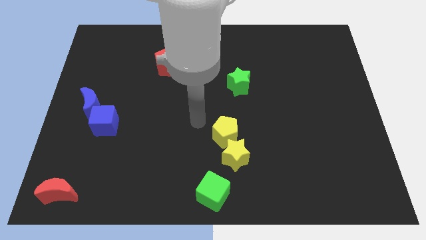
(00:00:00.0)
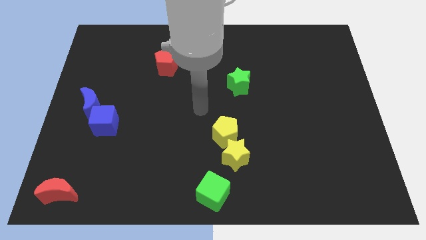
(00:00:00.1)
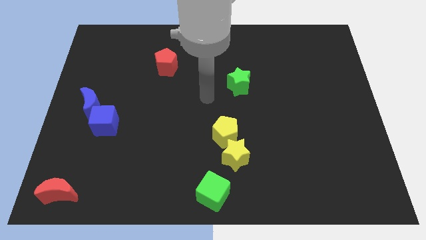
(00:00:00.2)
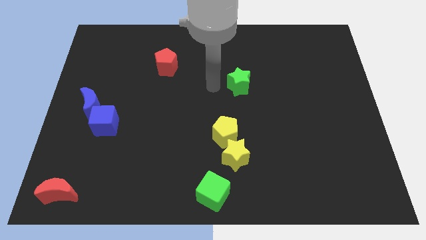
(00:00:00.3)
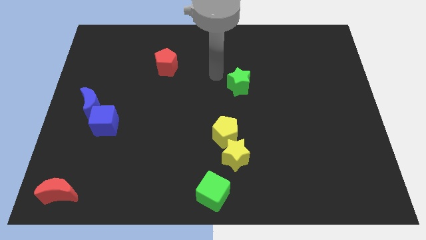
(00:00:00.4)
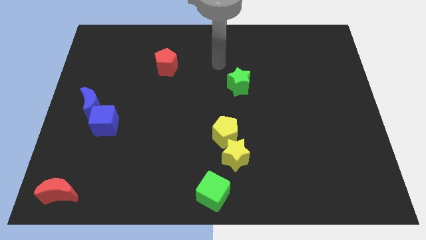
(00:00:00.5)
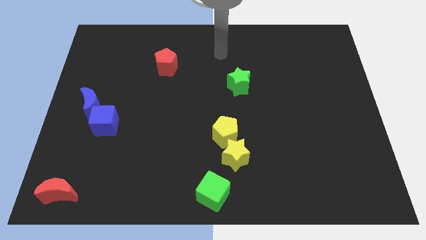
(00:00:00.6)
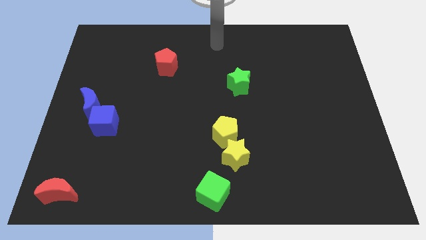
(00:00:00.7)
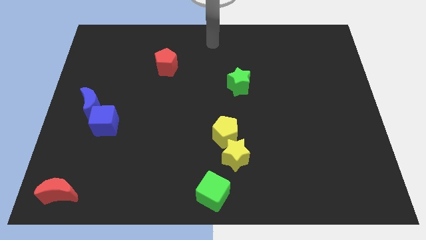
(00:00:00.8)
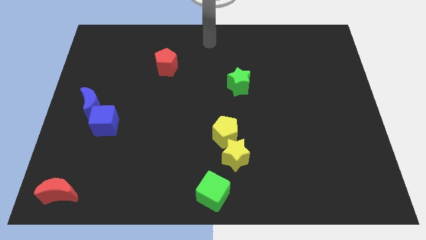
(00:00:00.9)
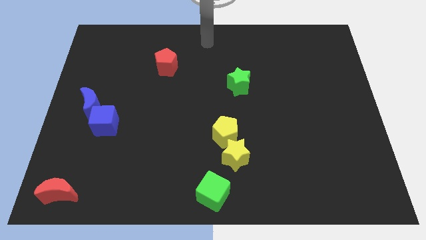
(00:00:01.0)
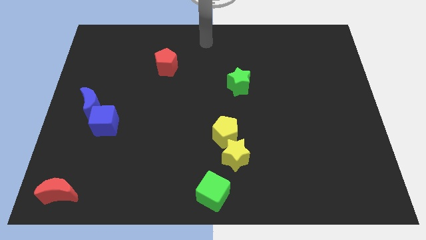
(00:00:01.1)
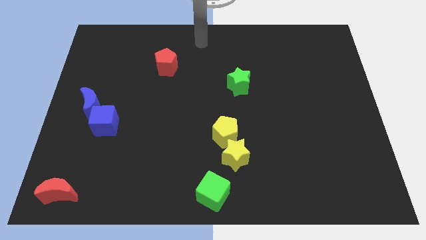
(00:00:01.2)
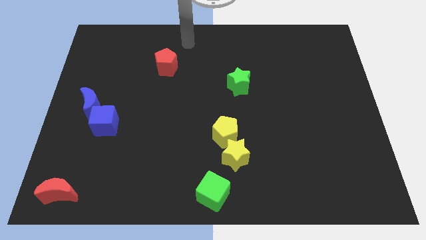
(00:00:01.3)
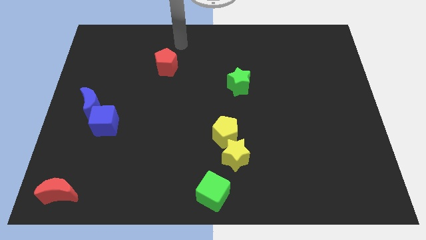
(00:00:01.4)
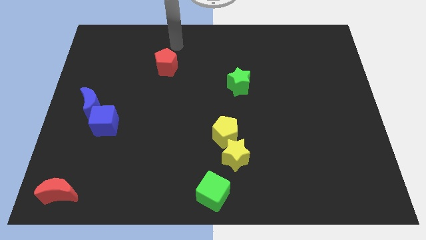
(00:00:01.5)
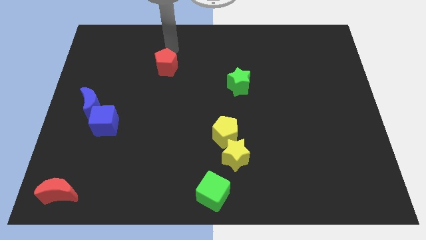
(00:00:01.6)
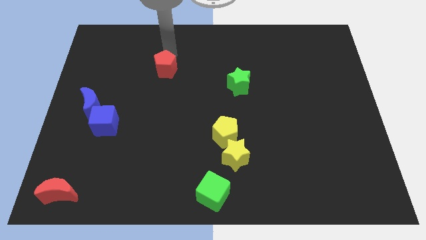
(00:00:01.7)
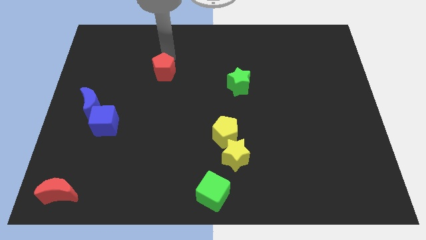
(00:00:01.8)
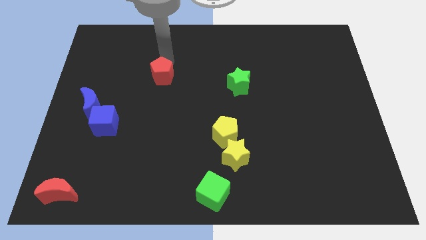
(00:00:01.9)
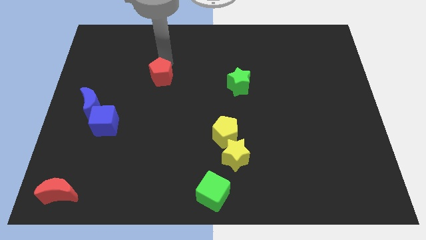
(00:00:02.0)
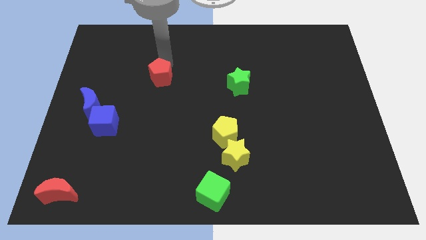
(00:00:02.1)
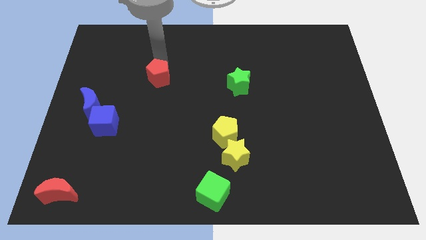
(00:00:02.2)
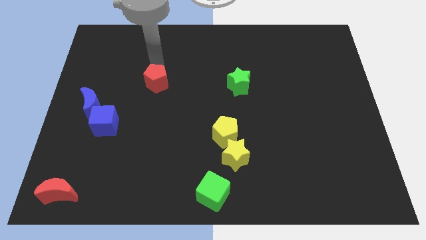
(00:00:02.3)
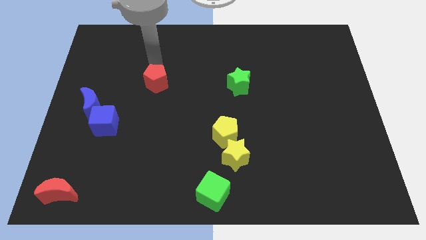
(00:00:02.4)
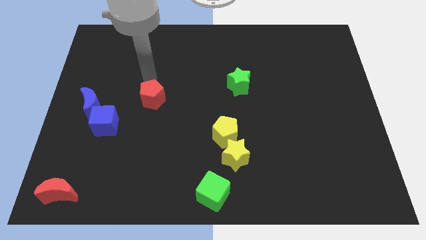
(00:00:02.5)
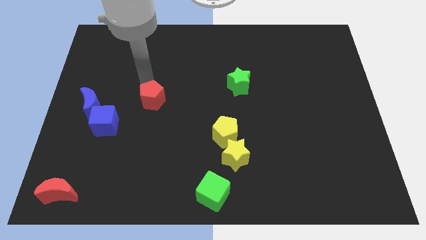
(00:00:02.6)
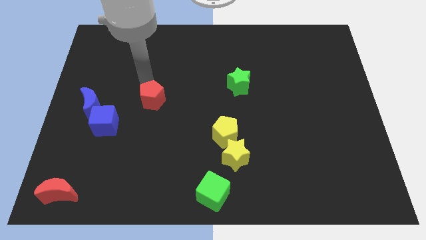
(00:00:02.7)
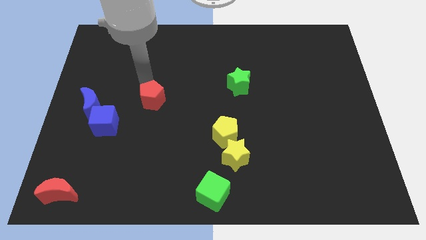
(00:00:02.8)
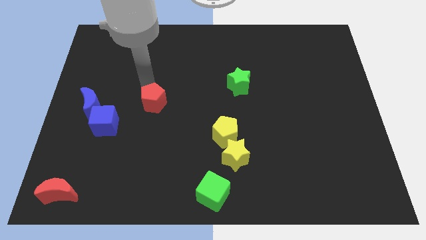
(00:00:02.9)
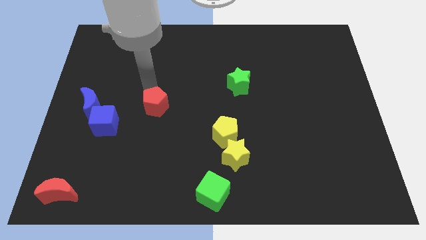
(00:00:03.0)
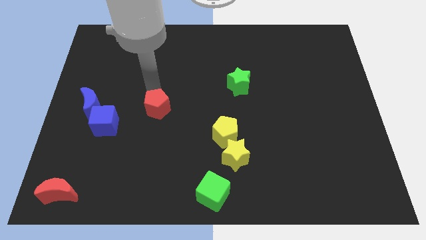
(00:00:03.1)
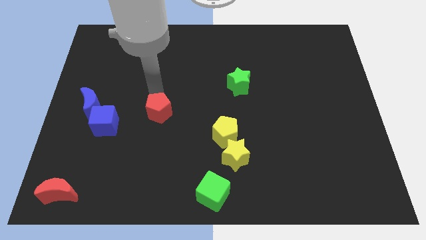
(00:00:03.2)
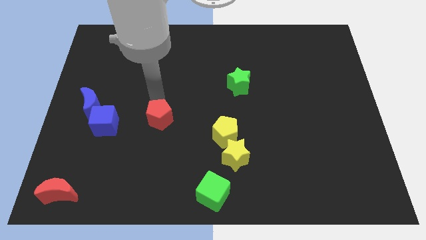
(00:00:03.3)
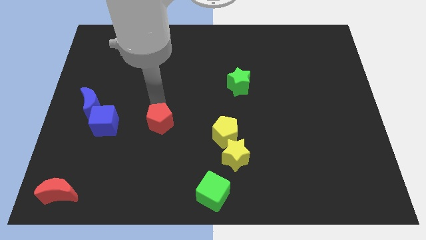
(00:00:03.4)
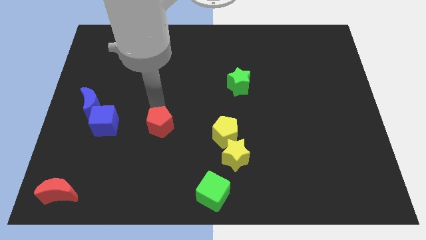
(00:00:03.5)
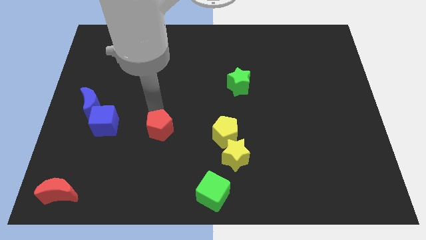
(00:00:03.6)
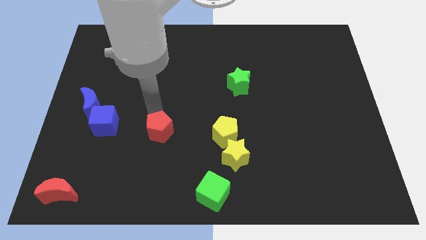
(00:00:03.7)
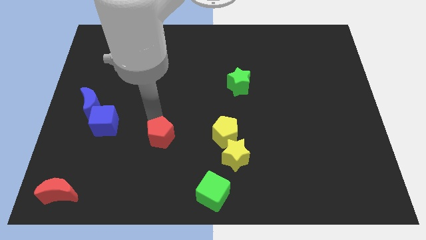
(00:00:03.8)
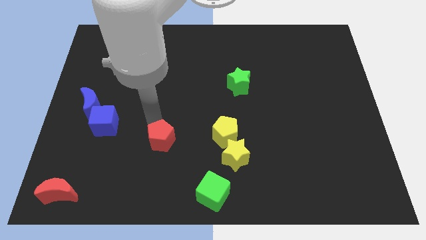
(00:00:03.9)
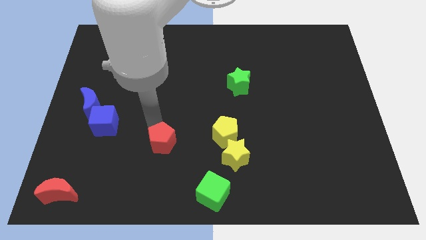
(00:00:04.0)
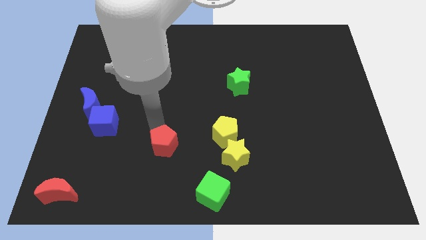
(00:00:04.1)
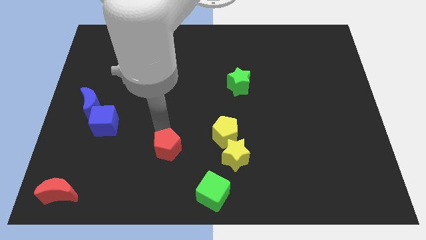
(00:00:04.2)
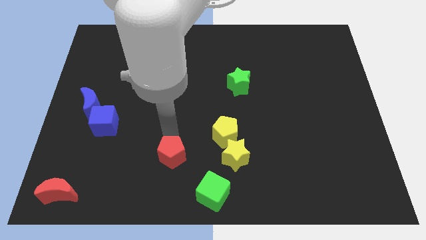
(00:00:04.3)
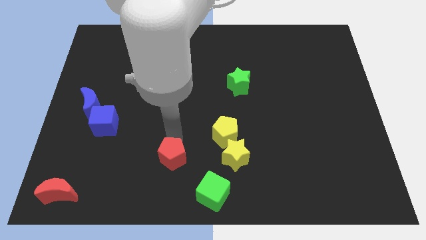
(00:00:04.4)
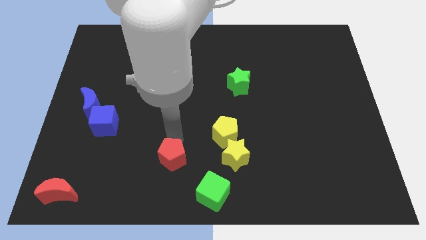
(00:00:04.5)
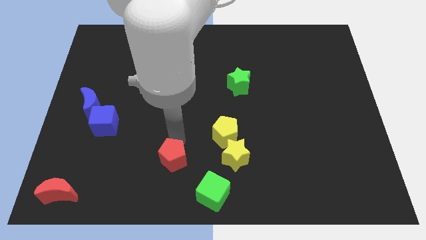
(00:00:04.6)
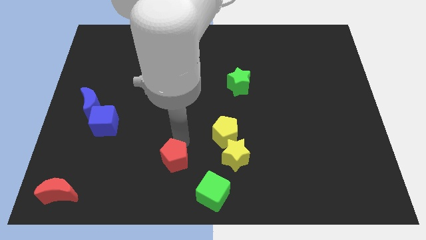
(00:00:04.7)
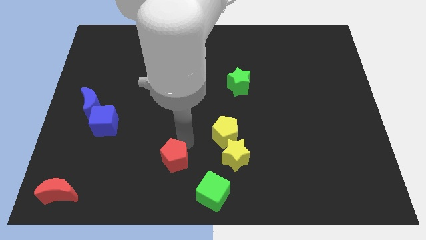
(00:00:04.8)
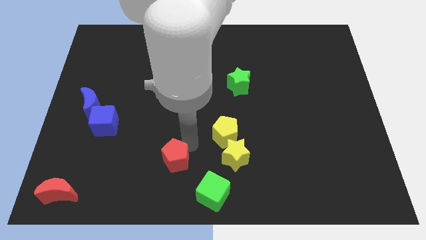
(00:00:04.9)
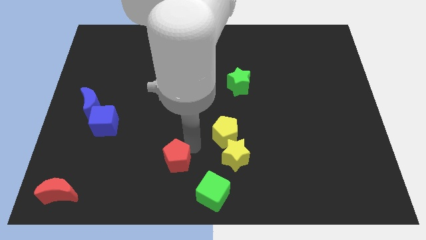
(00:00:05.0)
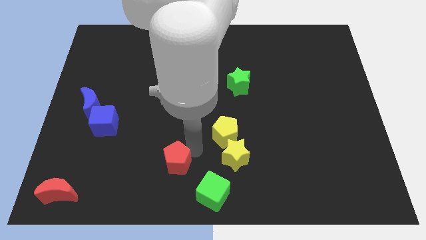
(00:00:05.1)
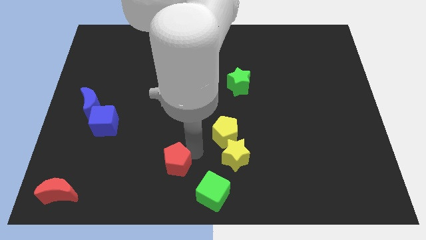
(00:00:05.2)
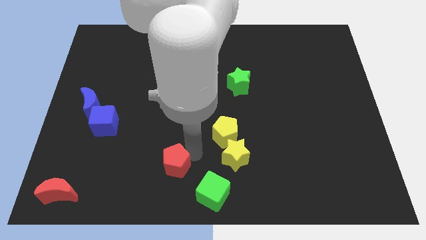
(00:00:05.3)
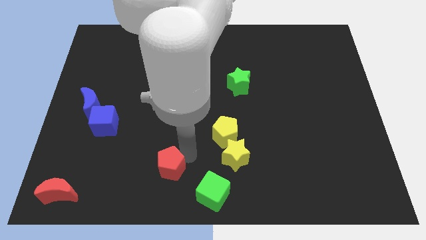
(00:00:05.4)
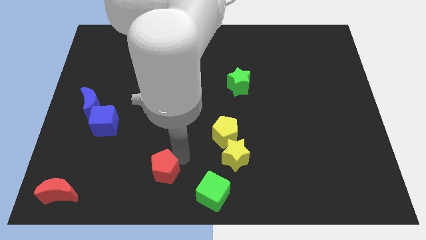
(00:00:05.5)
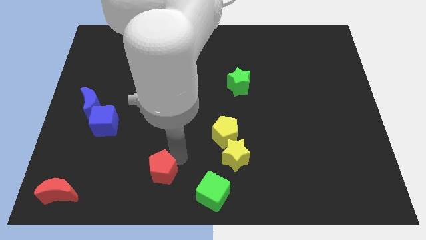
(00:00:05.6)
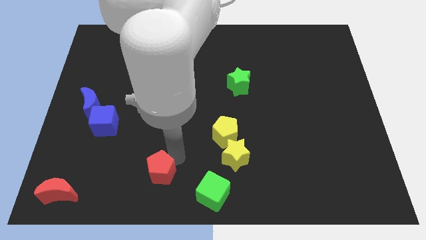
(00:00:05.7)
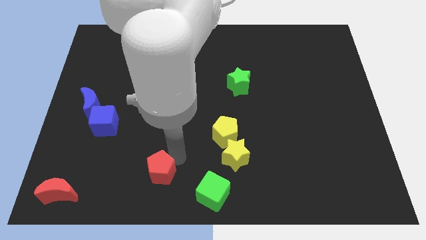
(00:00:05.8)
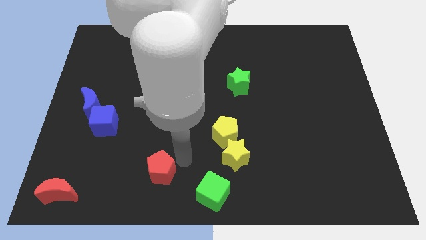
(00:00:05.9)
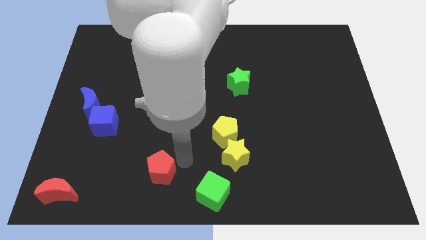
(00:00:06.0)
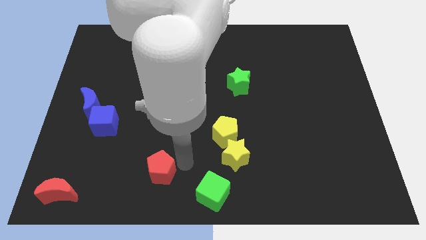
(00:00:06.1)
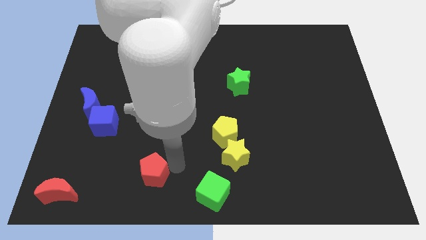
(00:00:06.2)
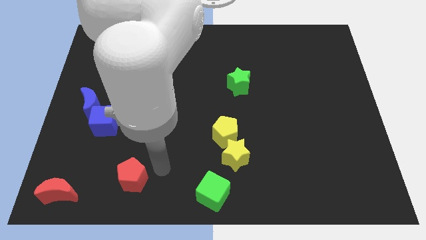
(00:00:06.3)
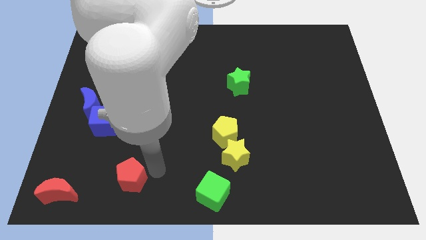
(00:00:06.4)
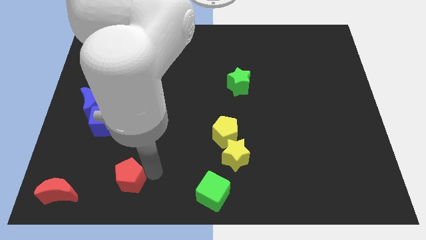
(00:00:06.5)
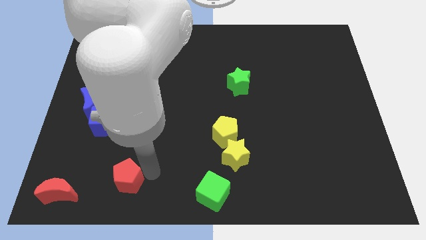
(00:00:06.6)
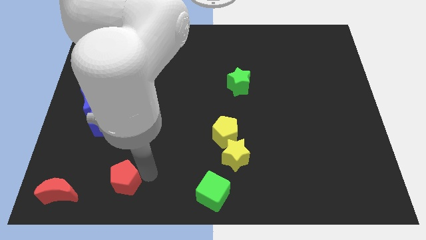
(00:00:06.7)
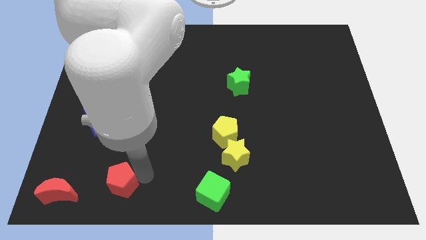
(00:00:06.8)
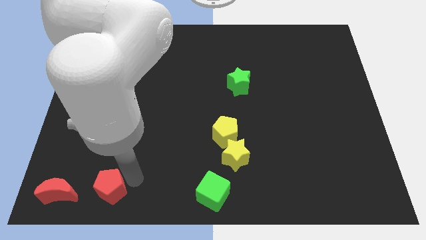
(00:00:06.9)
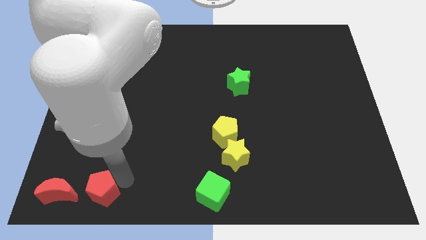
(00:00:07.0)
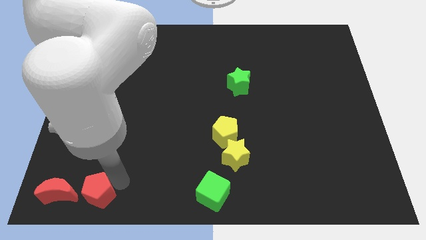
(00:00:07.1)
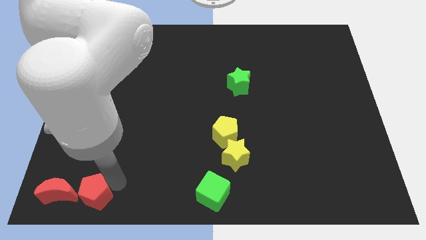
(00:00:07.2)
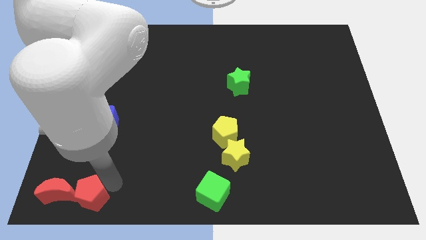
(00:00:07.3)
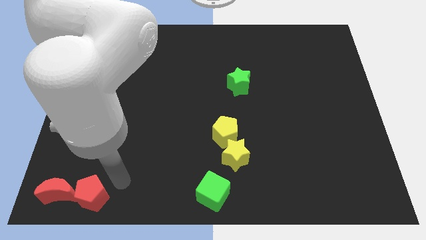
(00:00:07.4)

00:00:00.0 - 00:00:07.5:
move the red pentagon close to the right side of the red moon

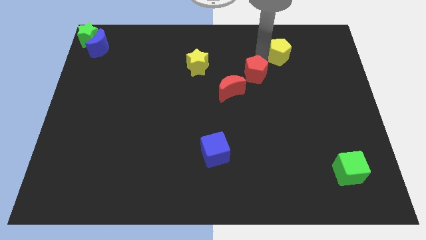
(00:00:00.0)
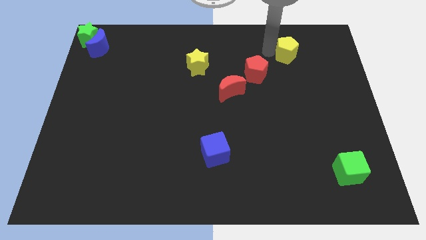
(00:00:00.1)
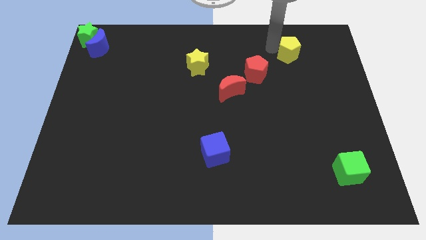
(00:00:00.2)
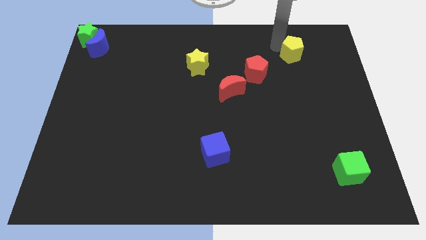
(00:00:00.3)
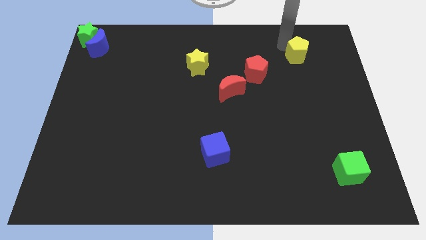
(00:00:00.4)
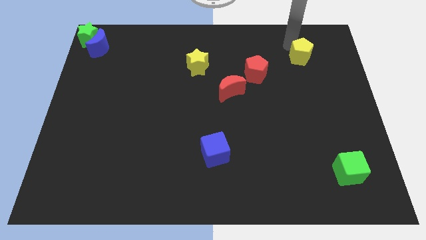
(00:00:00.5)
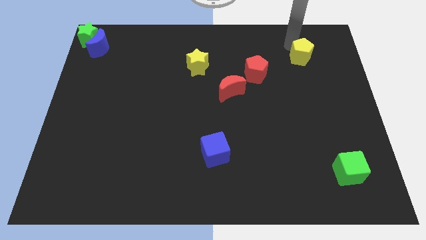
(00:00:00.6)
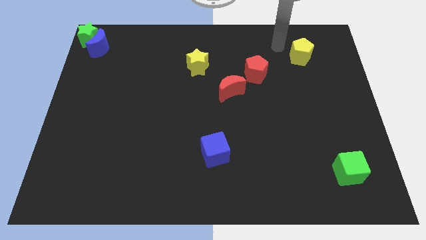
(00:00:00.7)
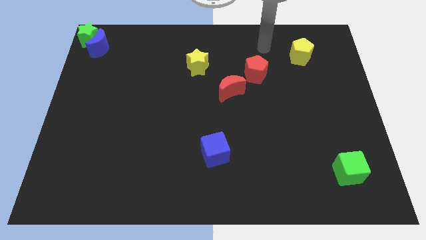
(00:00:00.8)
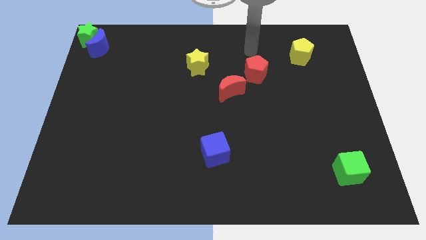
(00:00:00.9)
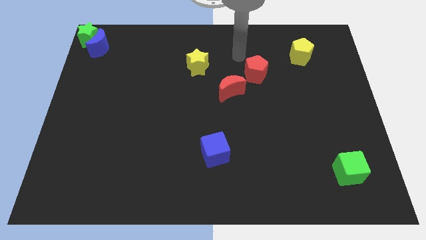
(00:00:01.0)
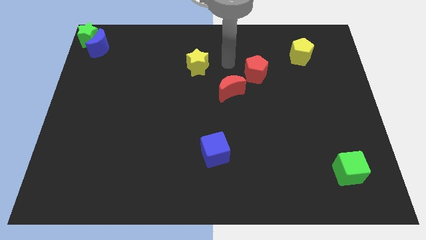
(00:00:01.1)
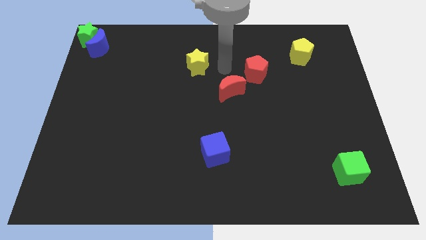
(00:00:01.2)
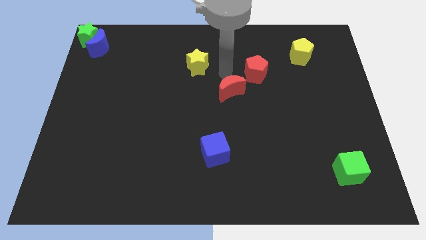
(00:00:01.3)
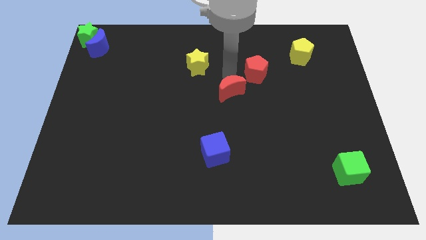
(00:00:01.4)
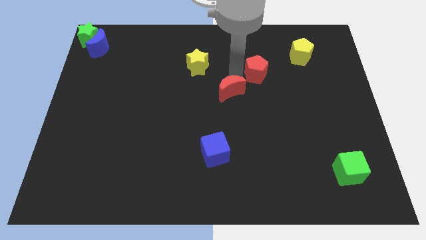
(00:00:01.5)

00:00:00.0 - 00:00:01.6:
push the yellow pentagon slightly towards the right
